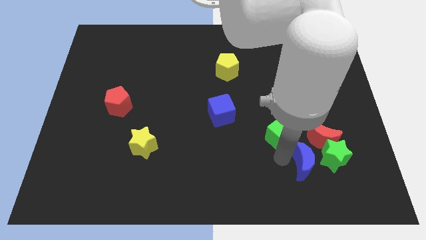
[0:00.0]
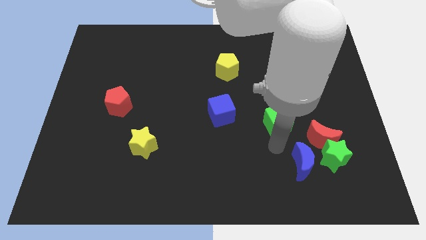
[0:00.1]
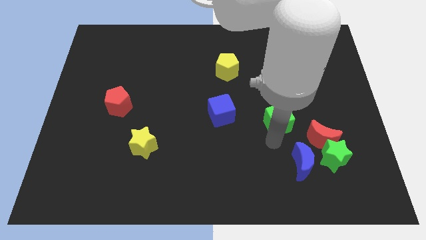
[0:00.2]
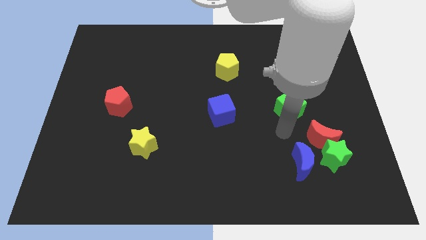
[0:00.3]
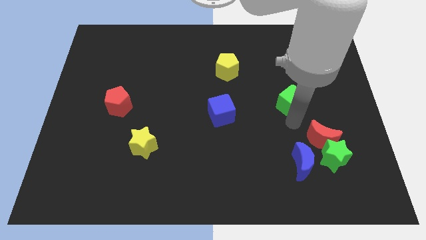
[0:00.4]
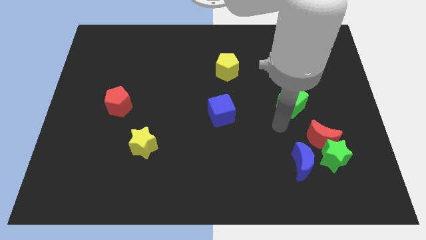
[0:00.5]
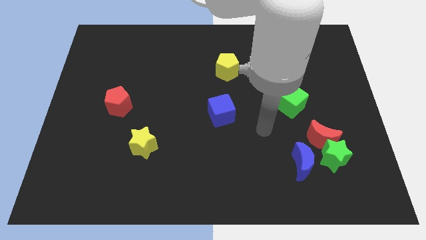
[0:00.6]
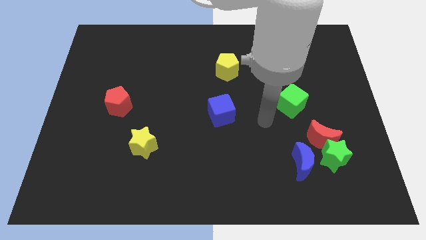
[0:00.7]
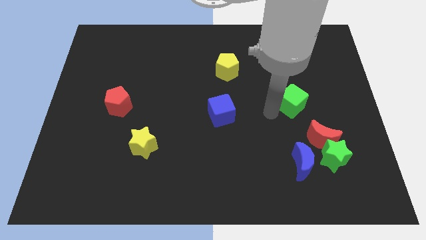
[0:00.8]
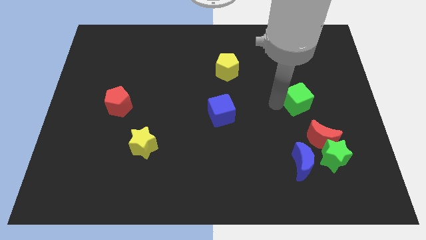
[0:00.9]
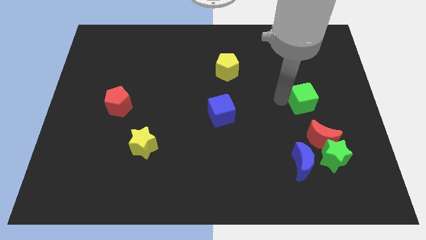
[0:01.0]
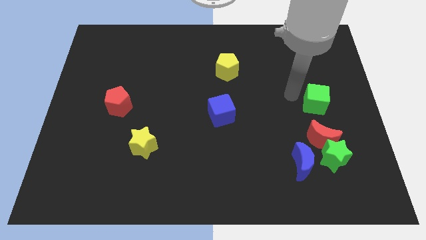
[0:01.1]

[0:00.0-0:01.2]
push the green cube to the right side of the board

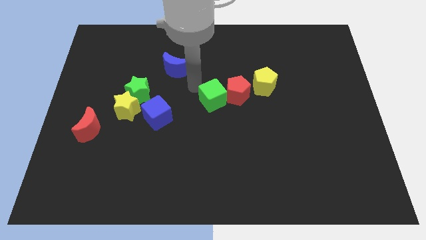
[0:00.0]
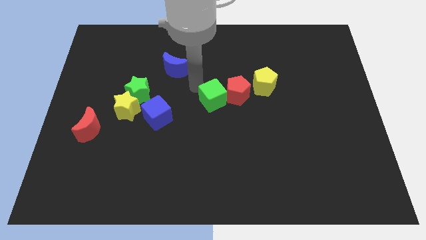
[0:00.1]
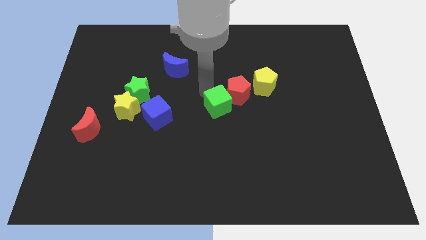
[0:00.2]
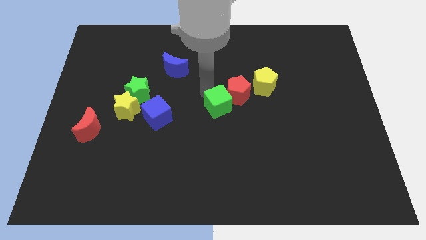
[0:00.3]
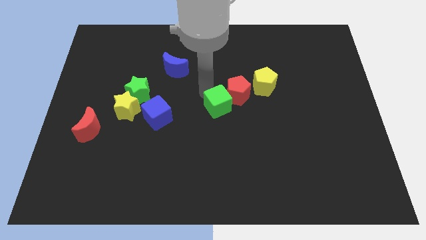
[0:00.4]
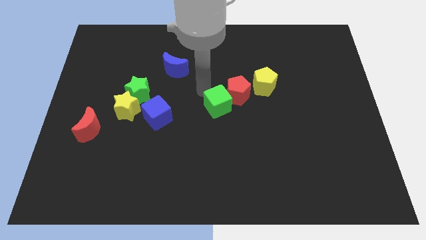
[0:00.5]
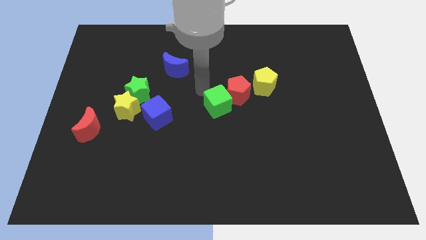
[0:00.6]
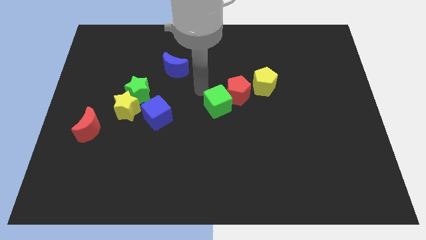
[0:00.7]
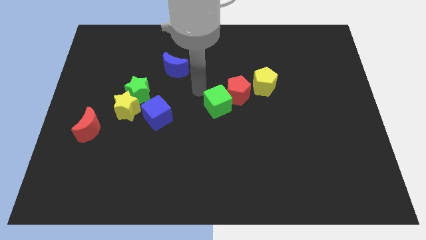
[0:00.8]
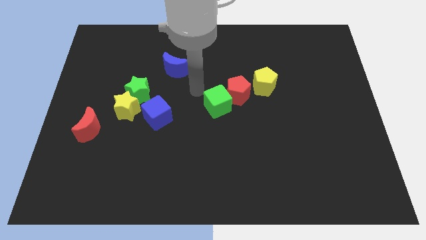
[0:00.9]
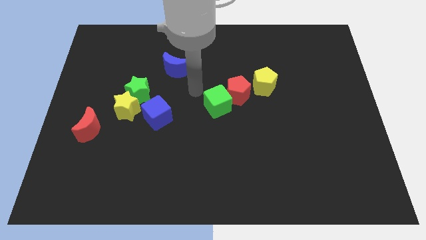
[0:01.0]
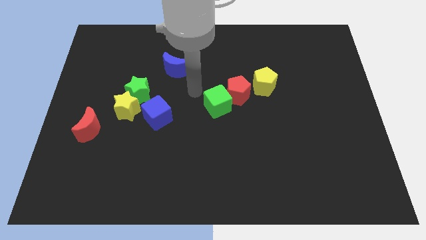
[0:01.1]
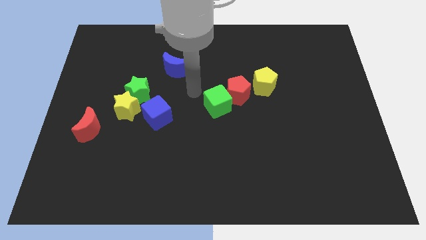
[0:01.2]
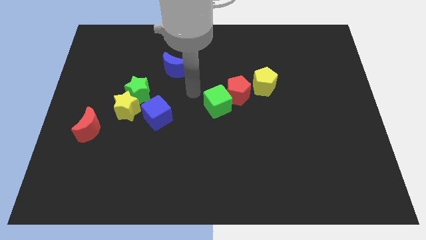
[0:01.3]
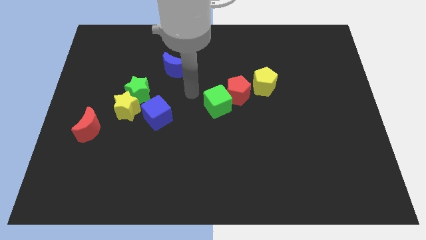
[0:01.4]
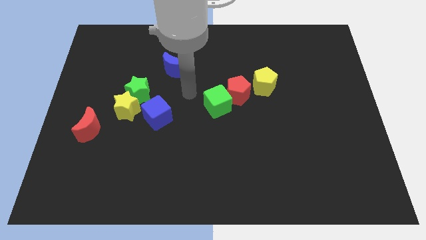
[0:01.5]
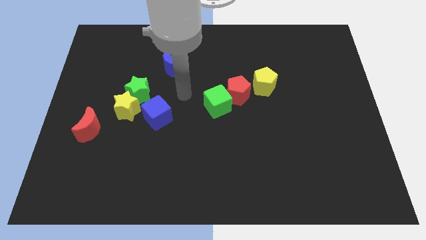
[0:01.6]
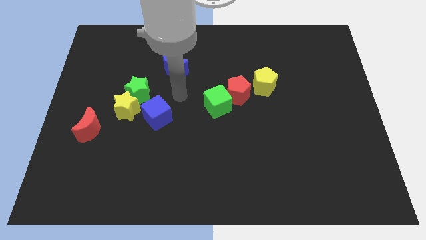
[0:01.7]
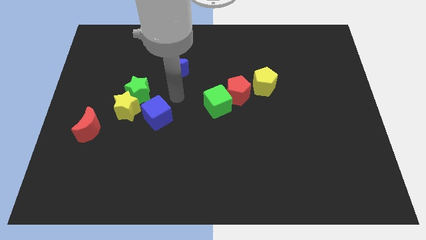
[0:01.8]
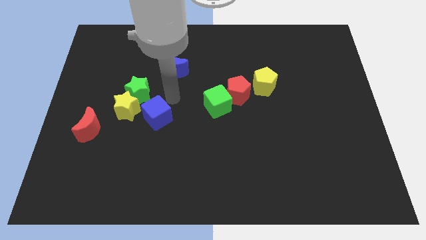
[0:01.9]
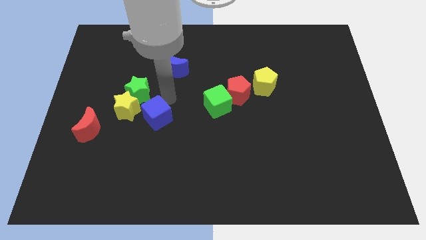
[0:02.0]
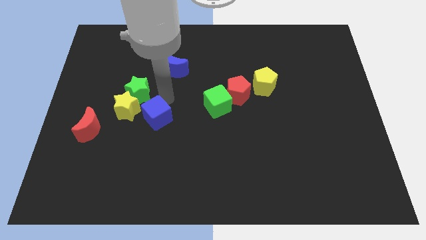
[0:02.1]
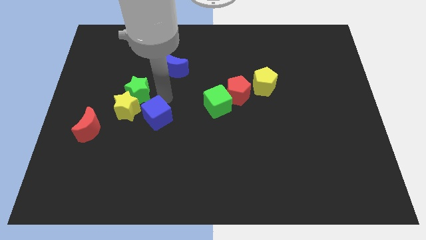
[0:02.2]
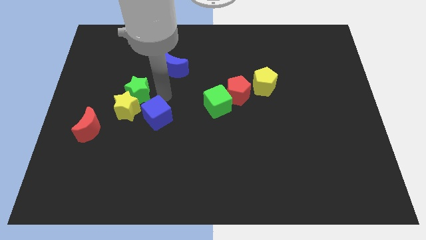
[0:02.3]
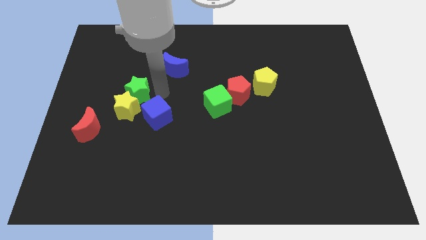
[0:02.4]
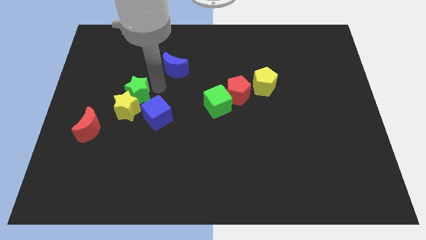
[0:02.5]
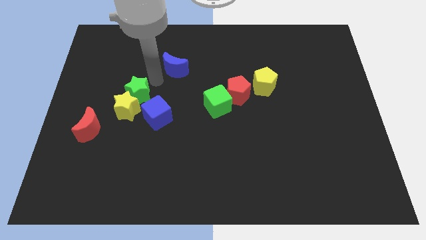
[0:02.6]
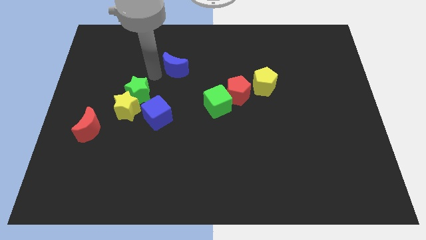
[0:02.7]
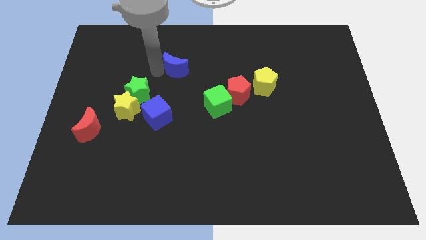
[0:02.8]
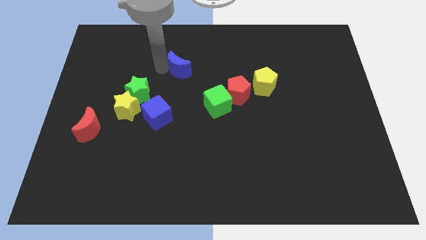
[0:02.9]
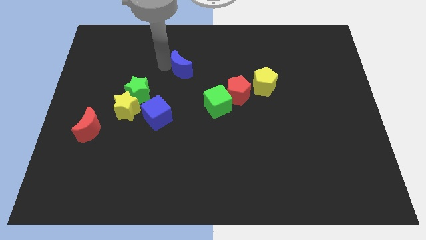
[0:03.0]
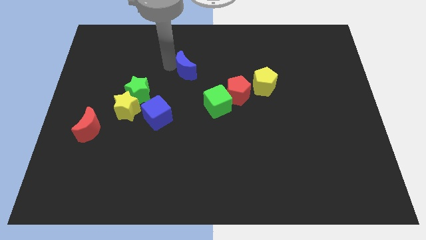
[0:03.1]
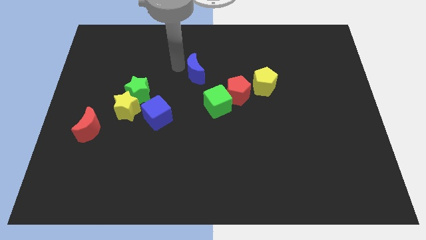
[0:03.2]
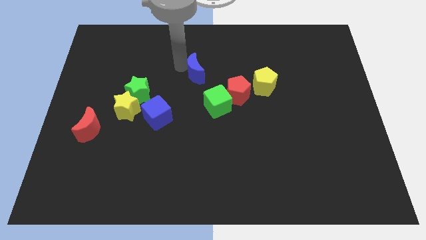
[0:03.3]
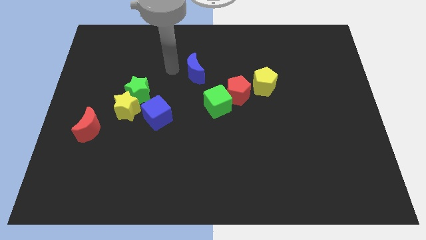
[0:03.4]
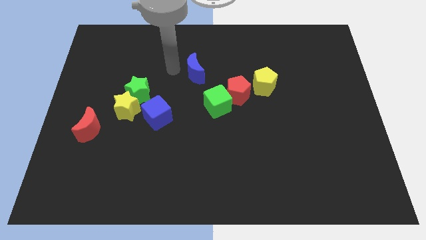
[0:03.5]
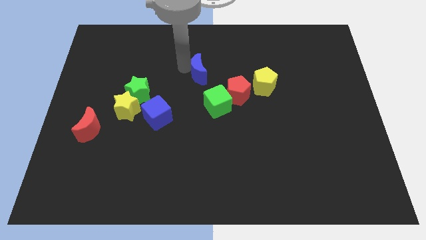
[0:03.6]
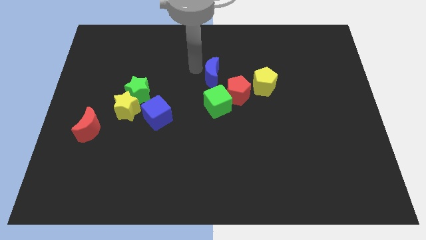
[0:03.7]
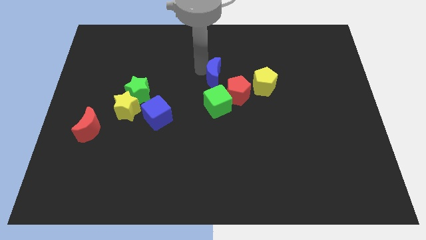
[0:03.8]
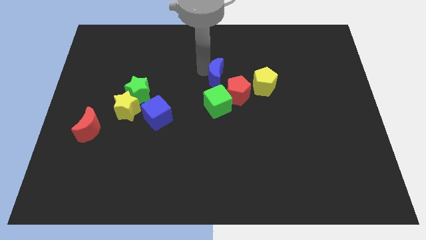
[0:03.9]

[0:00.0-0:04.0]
push the green cube and blue crescent towards the bottom side of the board

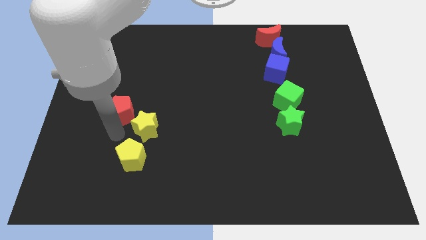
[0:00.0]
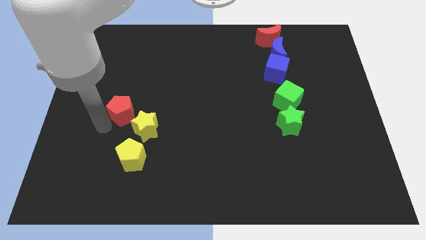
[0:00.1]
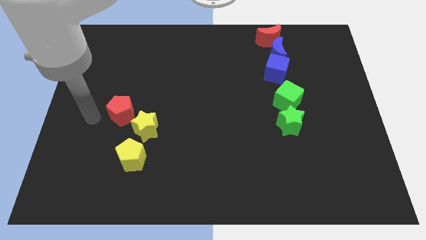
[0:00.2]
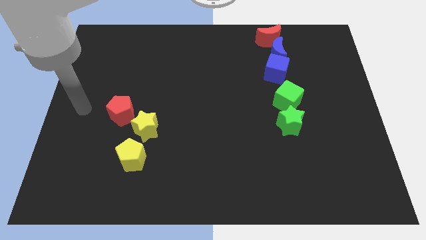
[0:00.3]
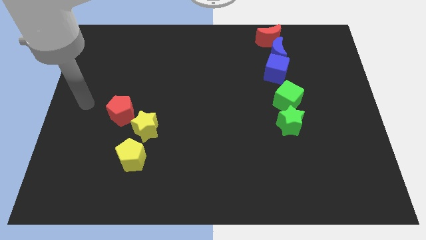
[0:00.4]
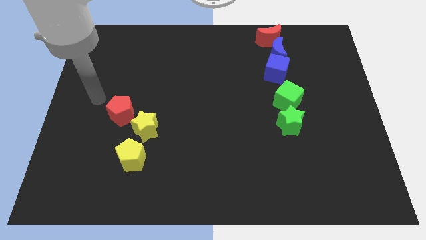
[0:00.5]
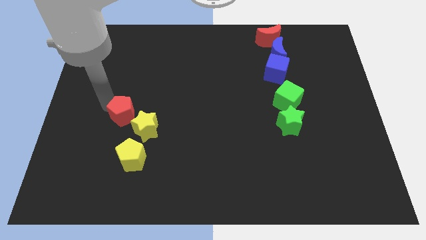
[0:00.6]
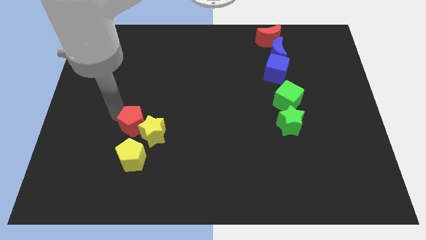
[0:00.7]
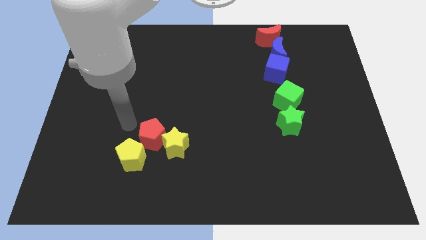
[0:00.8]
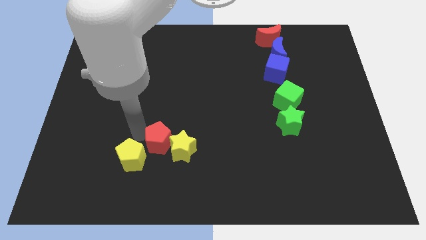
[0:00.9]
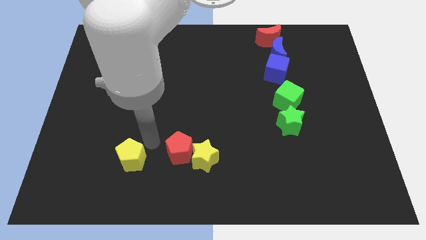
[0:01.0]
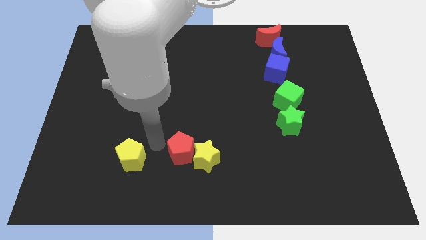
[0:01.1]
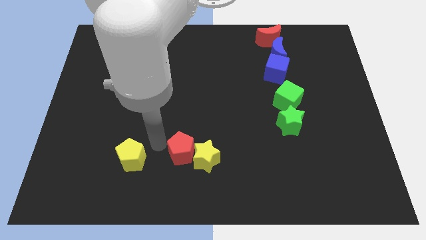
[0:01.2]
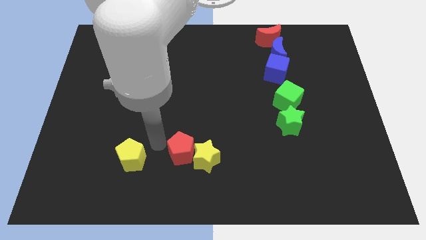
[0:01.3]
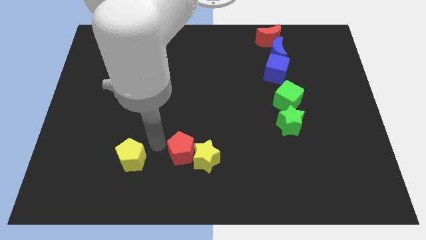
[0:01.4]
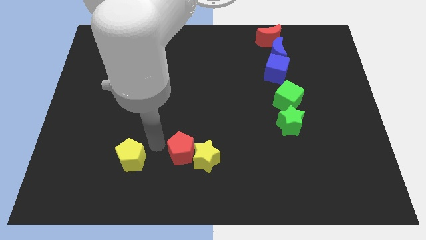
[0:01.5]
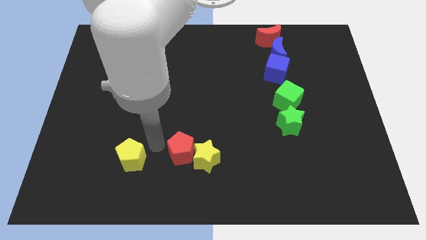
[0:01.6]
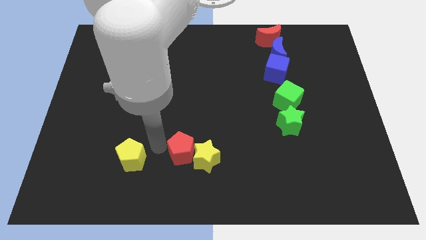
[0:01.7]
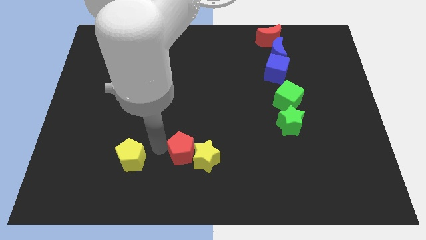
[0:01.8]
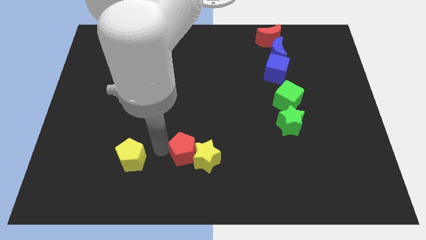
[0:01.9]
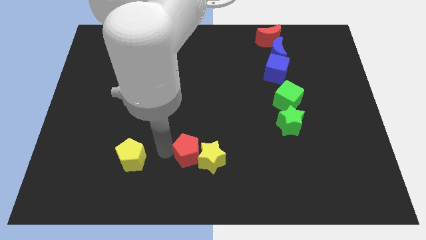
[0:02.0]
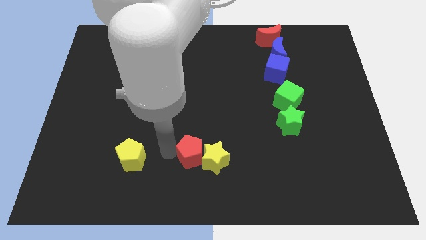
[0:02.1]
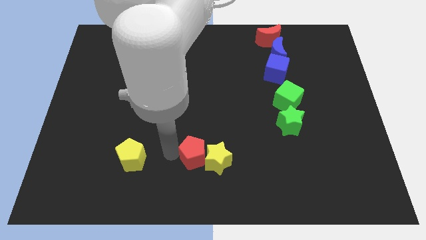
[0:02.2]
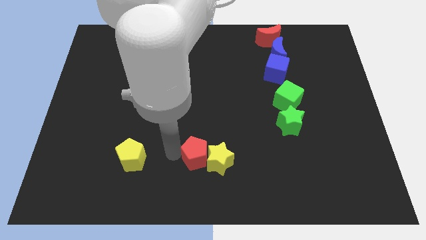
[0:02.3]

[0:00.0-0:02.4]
push the red pentagon into yellow star

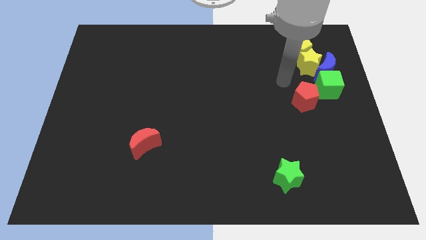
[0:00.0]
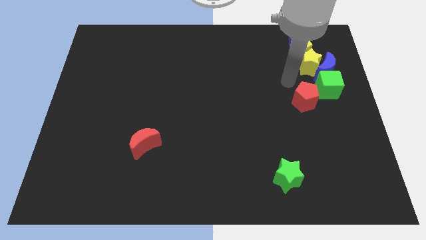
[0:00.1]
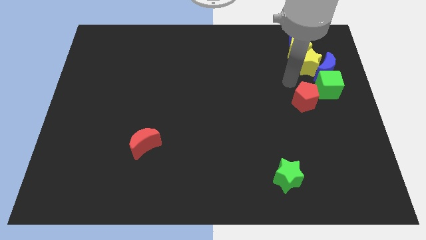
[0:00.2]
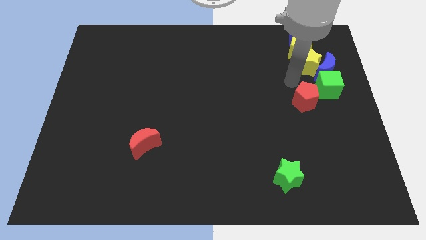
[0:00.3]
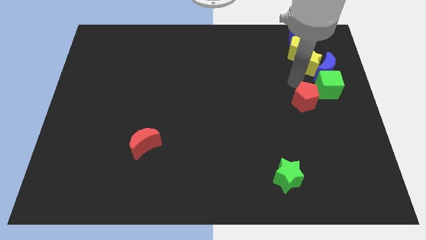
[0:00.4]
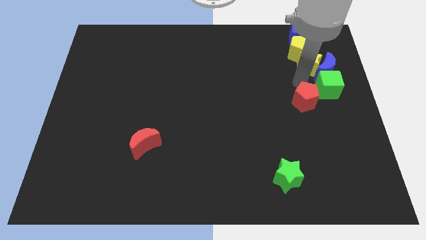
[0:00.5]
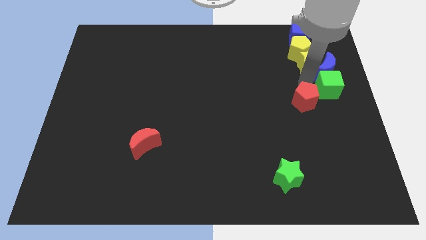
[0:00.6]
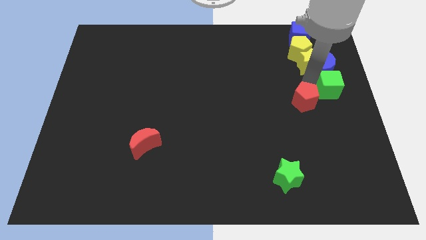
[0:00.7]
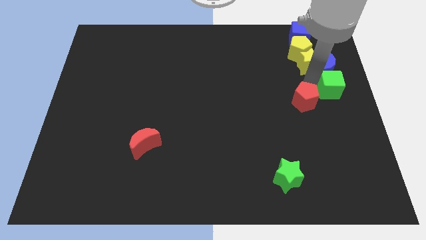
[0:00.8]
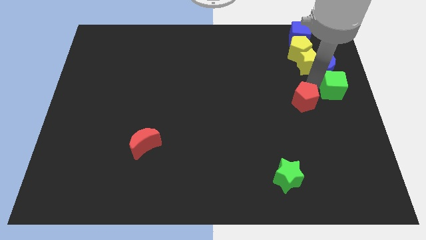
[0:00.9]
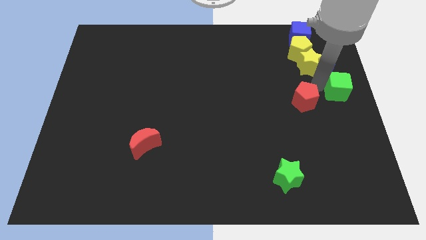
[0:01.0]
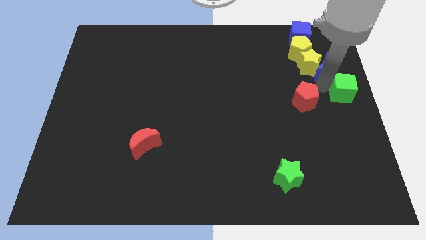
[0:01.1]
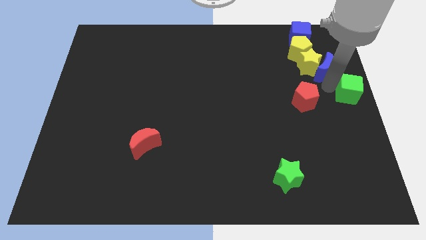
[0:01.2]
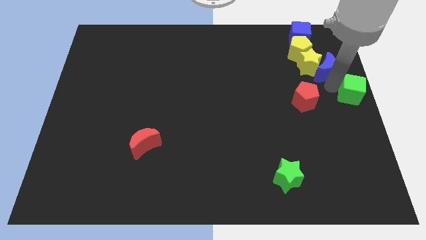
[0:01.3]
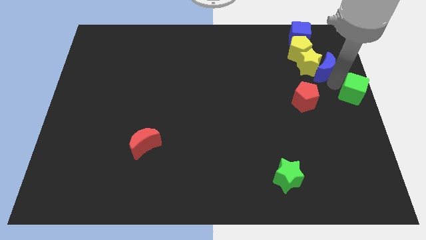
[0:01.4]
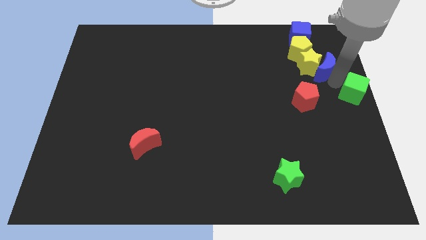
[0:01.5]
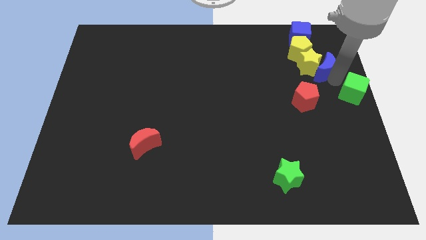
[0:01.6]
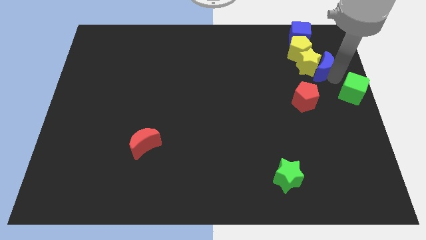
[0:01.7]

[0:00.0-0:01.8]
push the green cube slightly to the right
